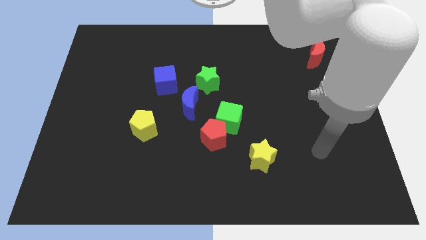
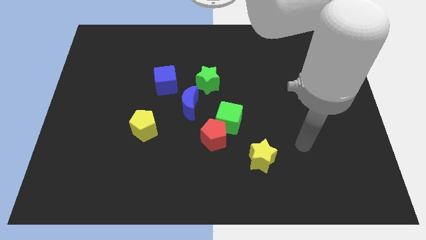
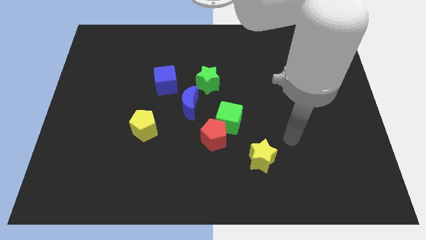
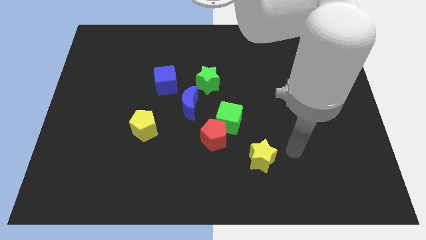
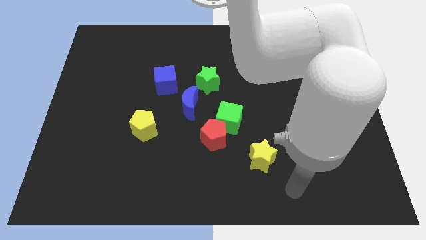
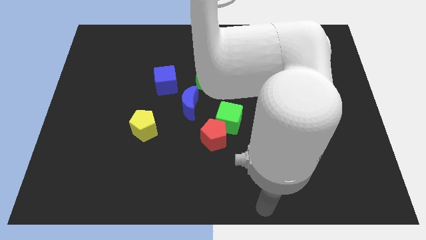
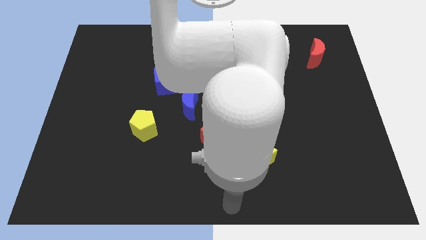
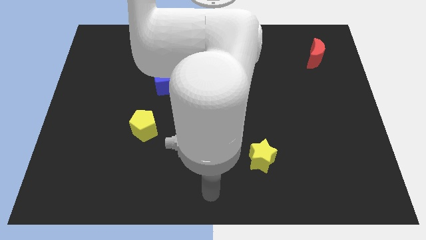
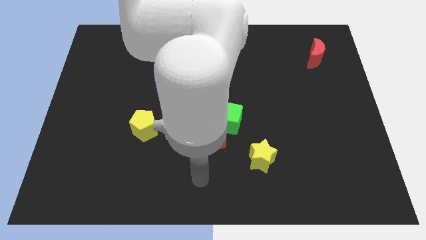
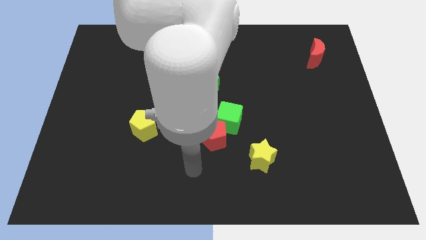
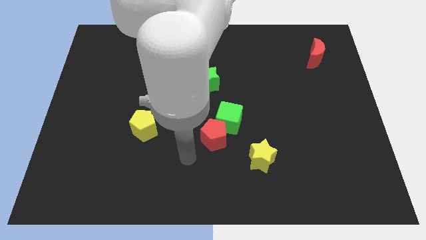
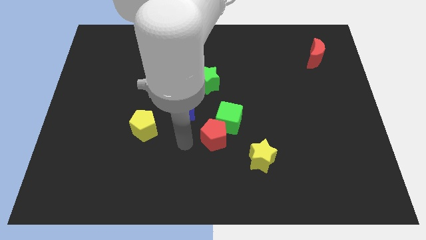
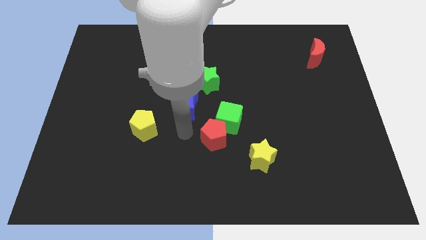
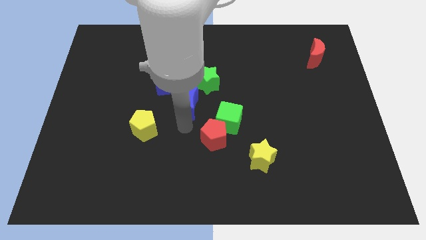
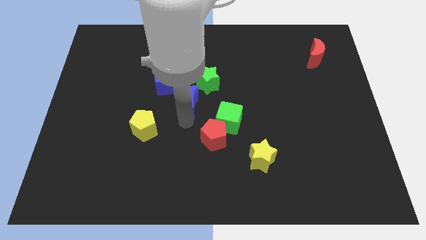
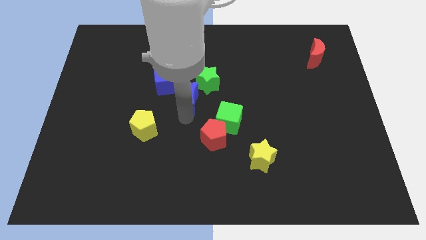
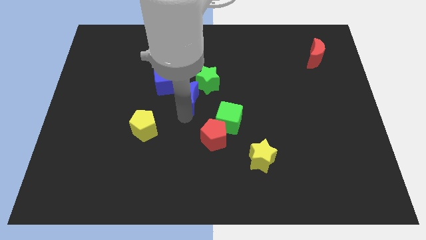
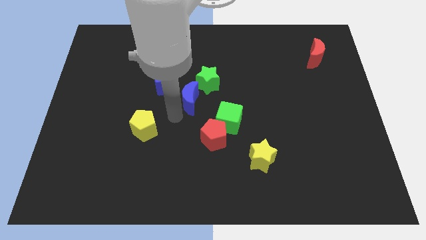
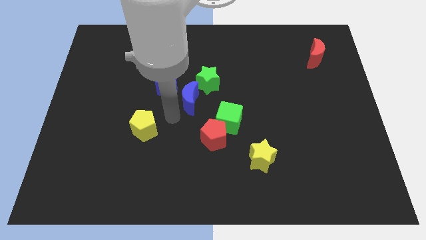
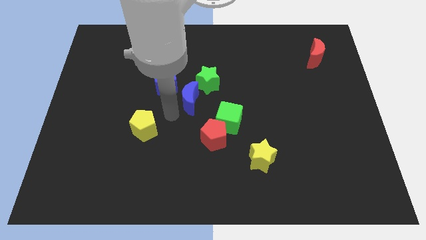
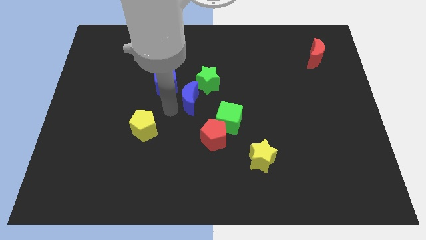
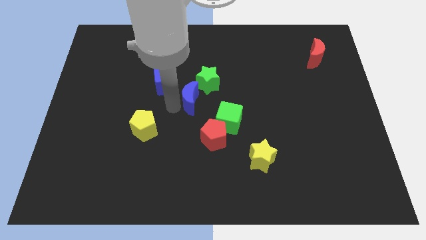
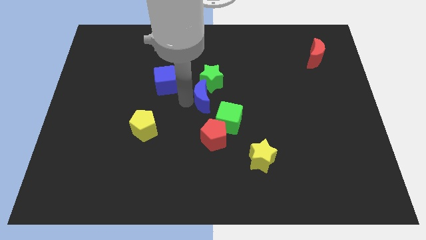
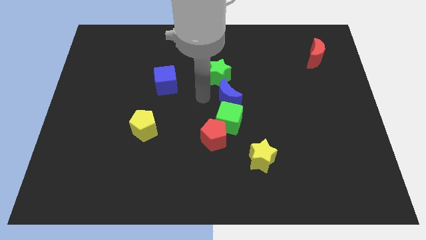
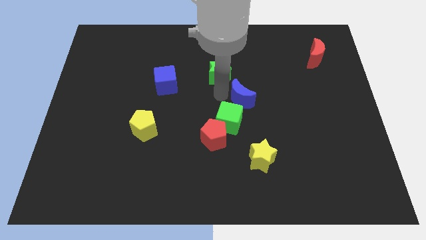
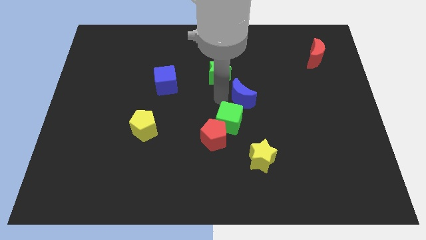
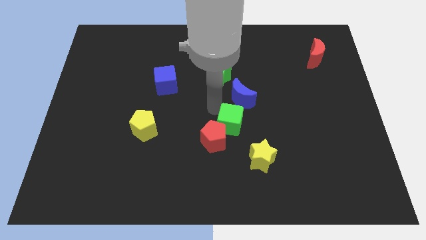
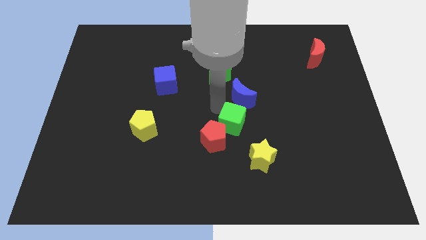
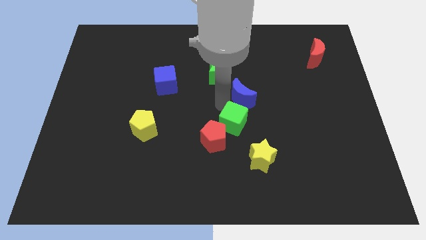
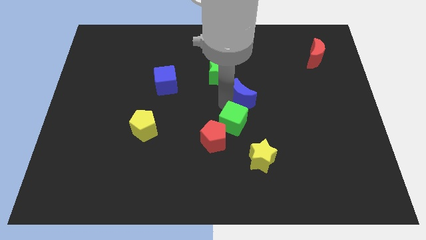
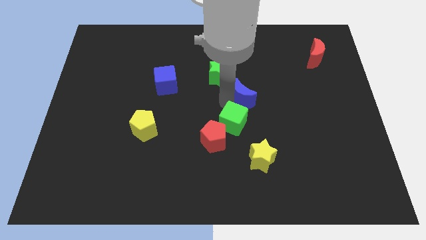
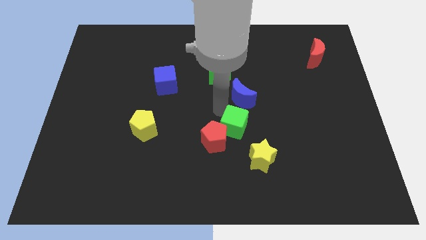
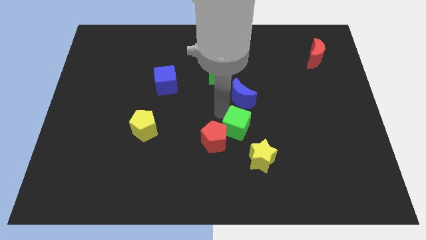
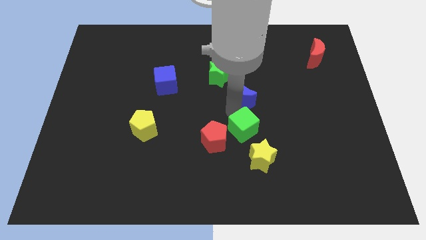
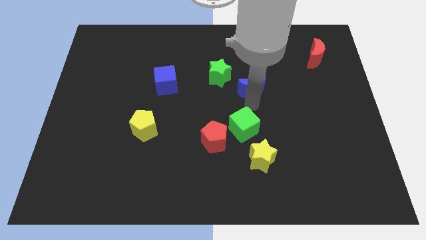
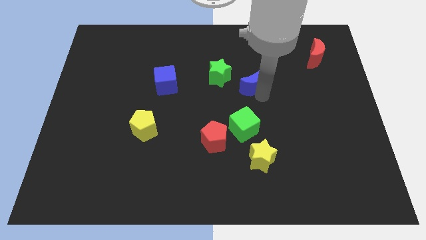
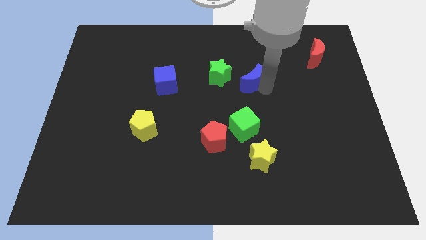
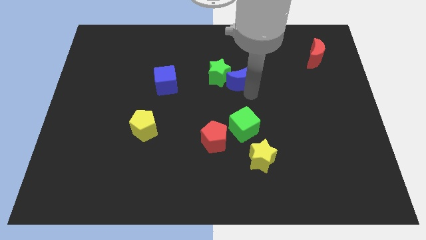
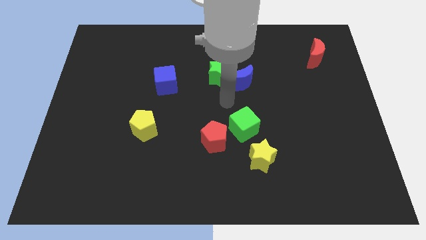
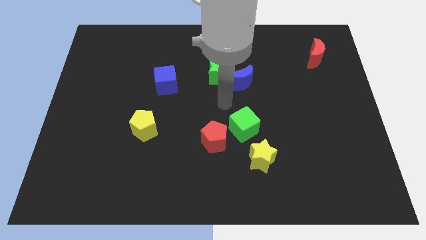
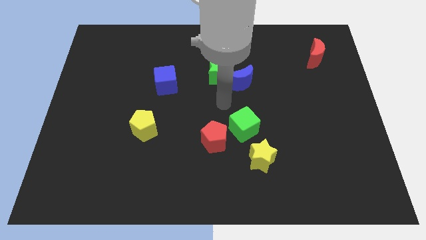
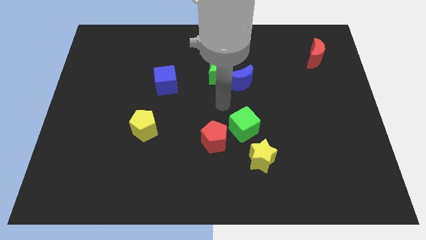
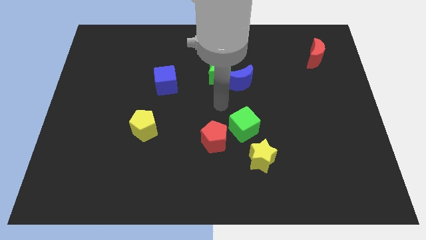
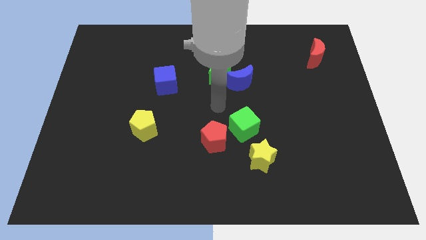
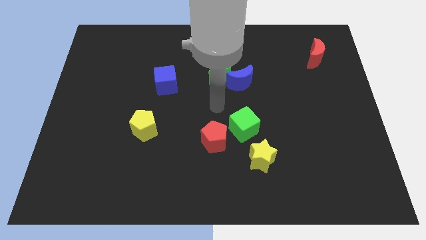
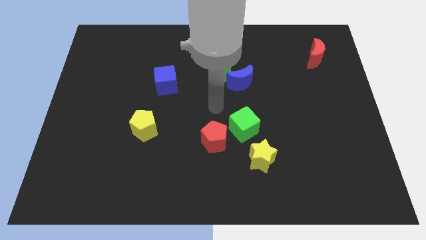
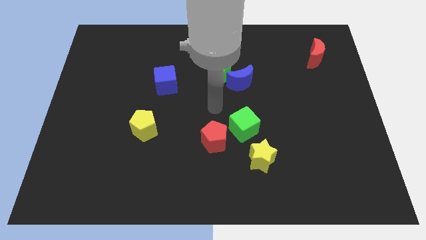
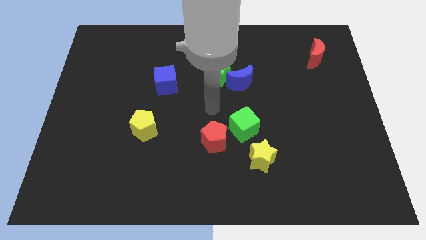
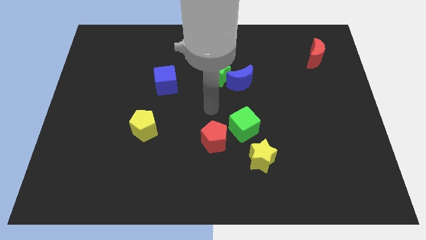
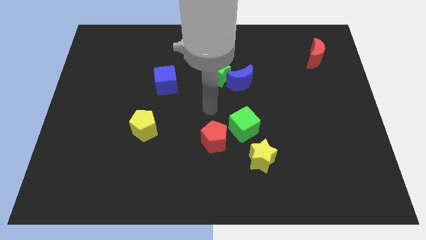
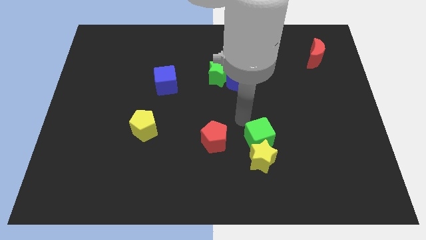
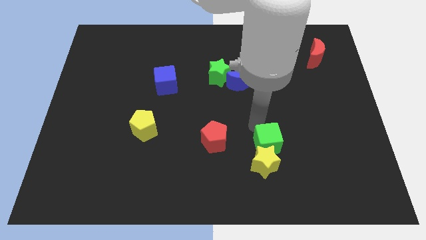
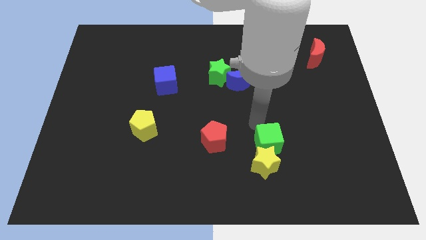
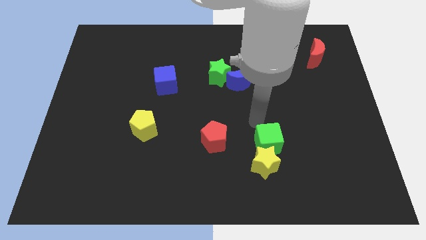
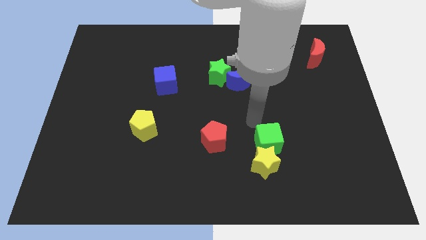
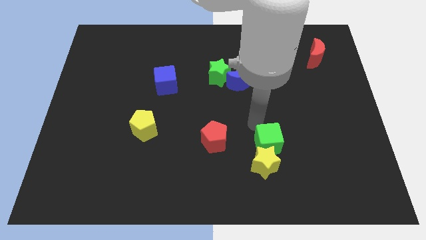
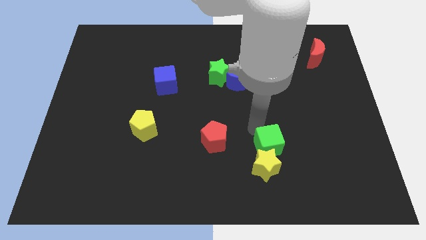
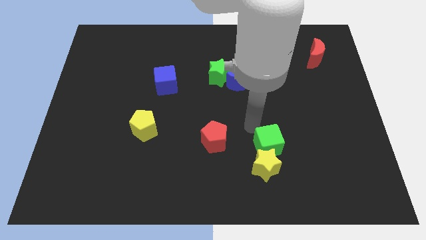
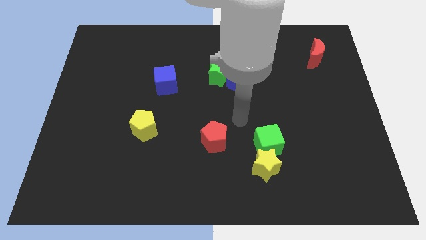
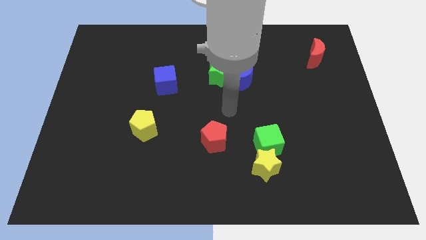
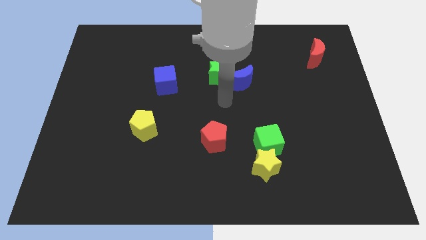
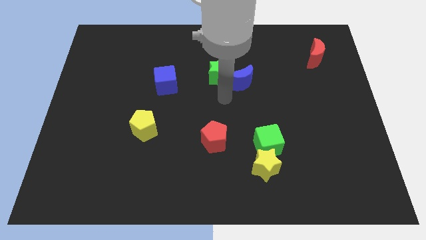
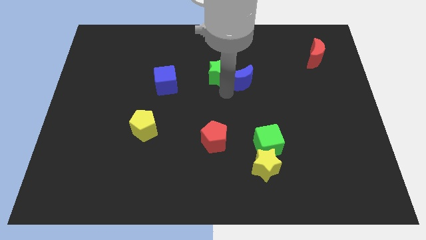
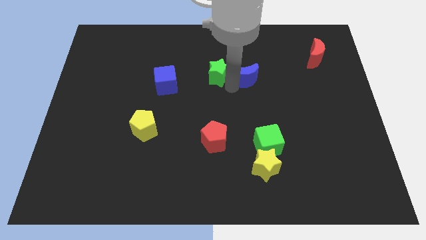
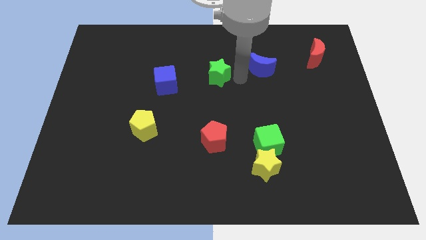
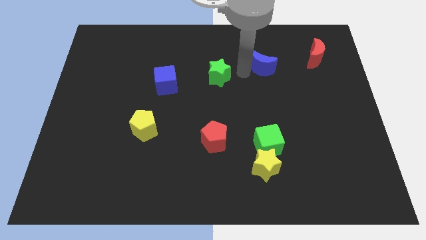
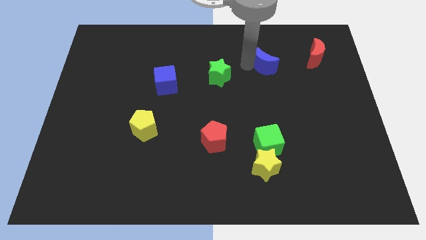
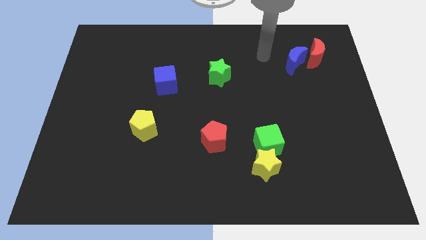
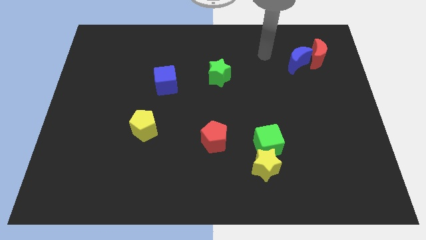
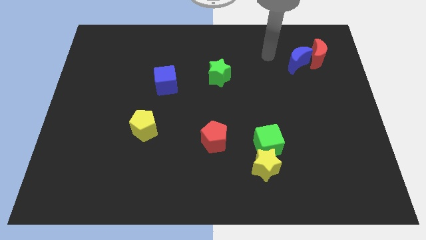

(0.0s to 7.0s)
put the blue moon close to the red moon

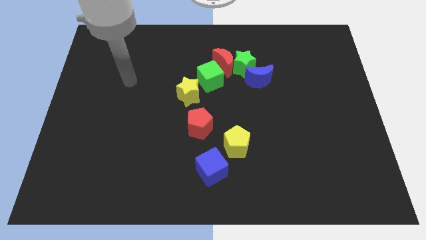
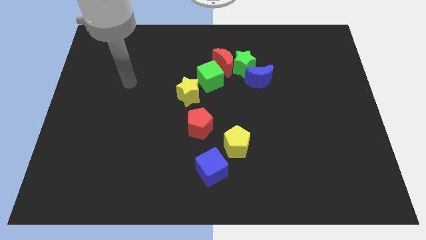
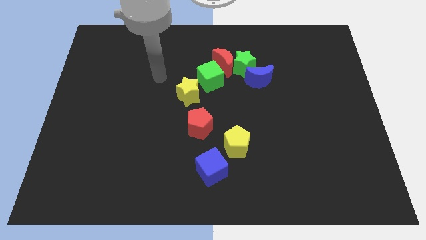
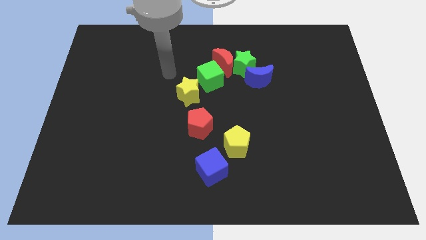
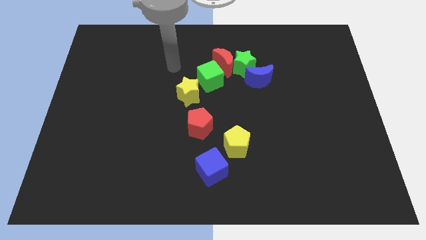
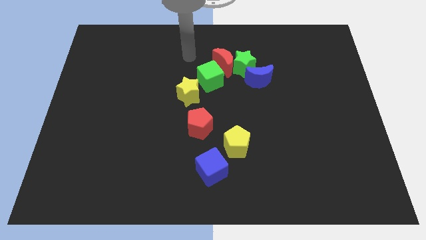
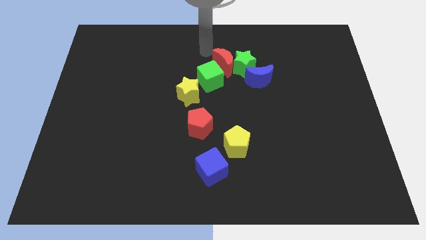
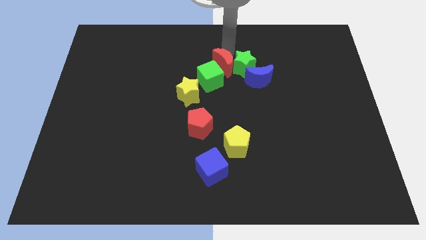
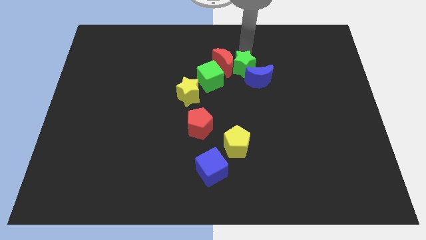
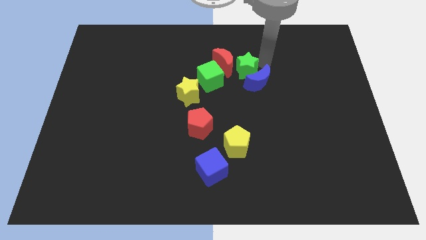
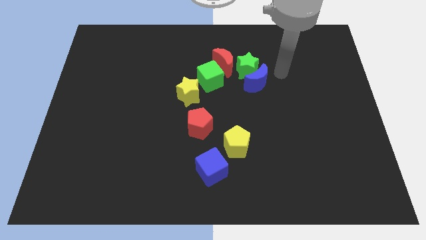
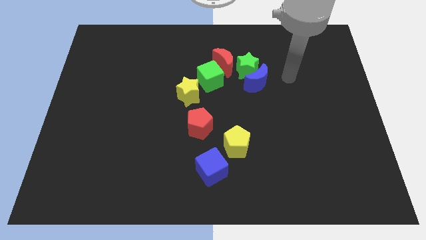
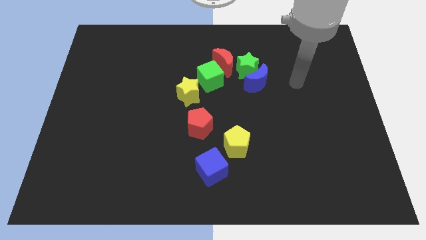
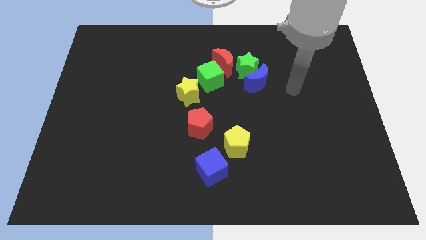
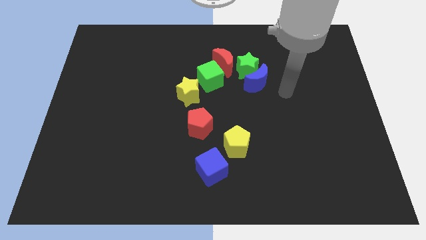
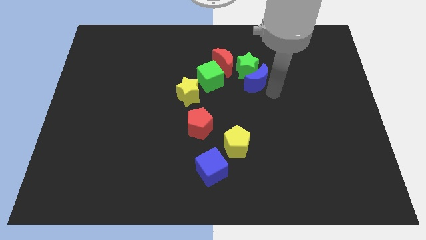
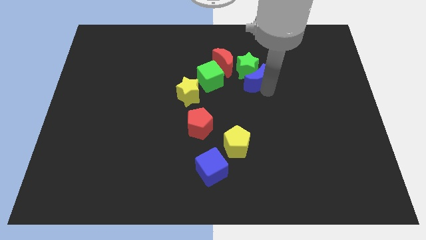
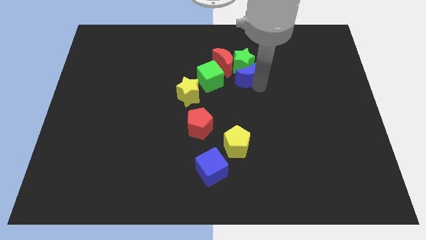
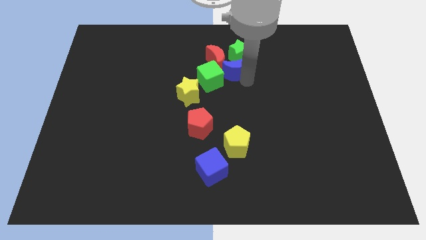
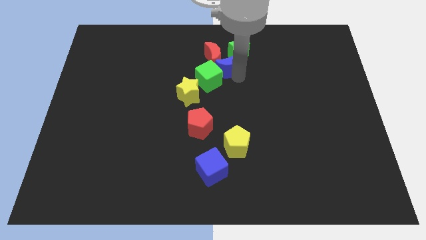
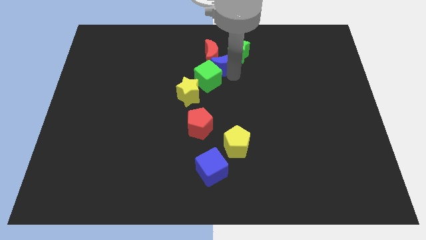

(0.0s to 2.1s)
slide the blue moon next to the red moon
